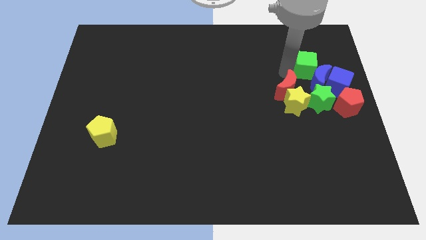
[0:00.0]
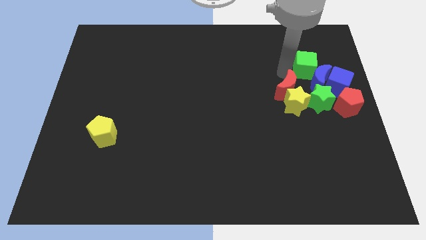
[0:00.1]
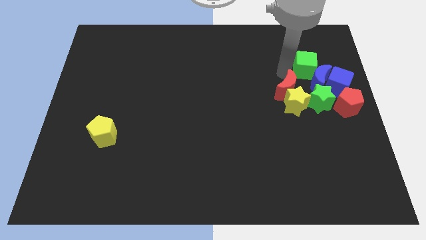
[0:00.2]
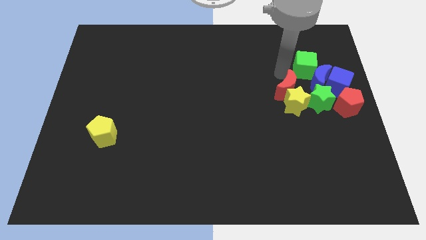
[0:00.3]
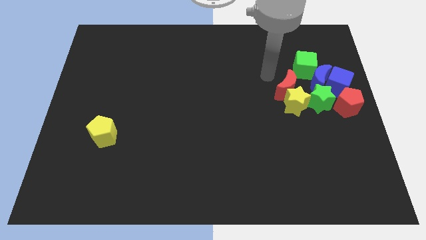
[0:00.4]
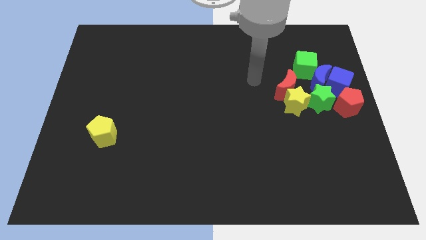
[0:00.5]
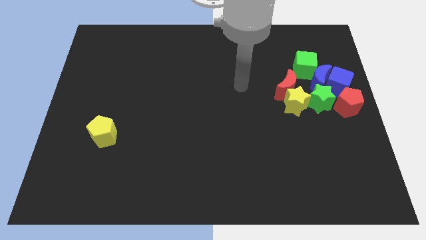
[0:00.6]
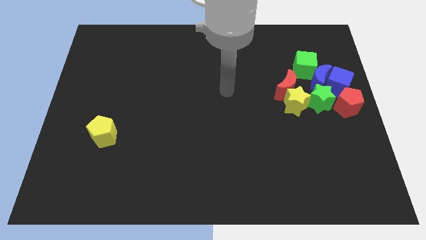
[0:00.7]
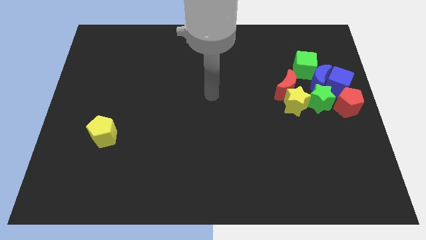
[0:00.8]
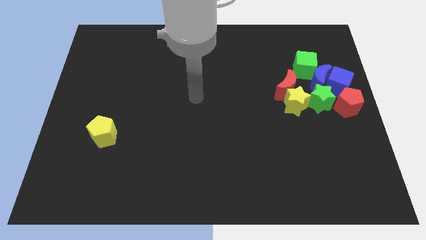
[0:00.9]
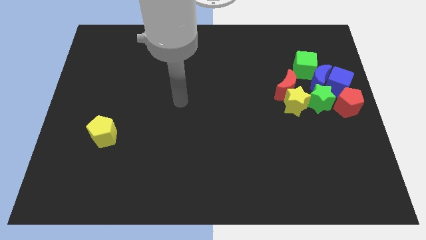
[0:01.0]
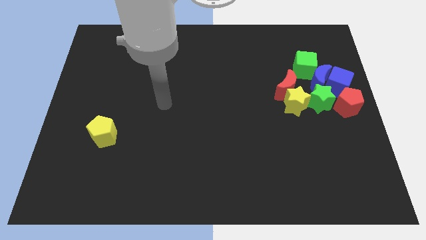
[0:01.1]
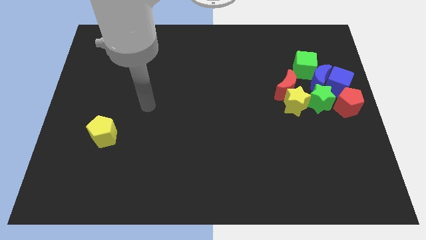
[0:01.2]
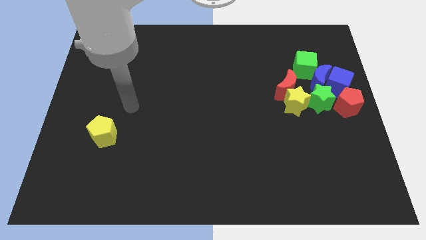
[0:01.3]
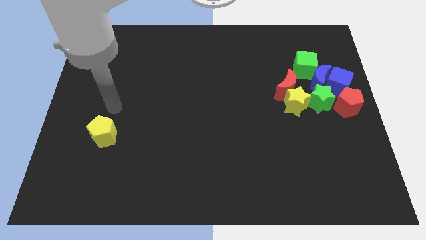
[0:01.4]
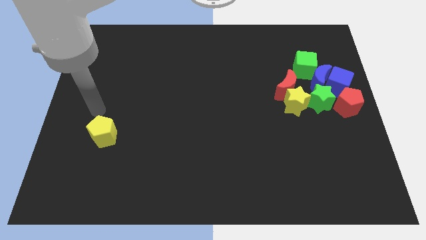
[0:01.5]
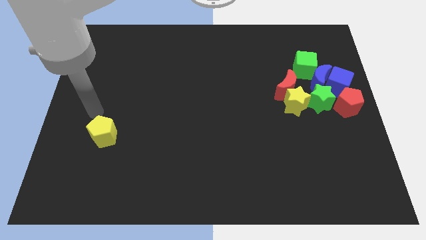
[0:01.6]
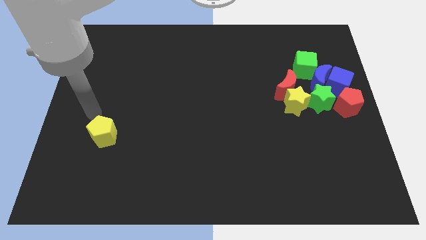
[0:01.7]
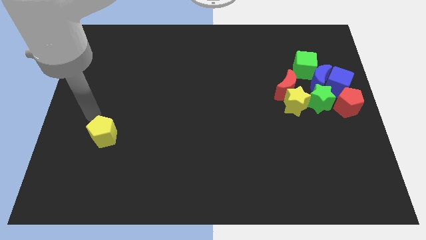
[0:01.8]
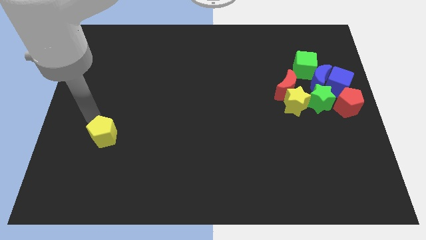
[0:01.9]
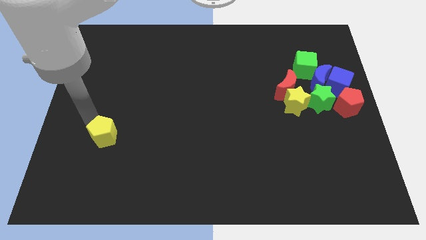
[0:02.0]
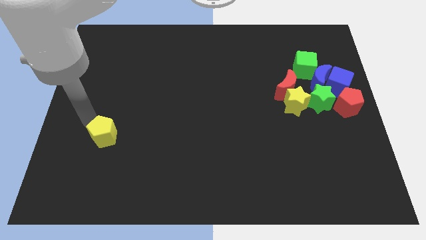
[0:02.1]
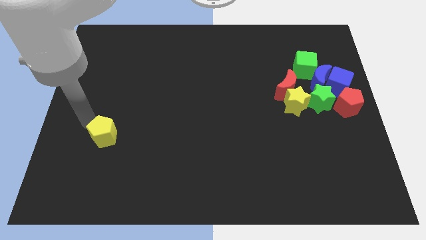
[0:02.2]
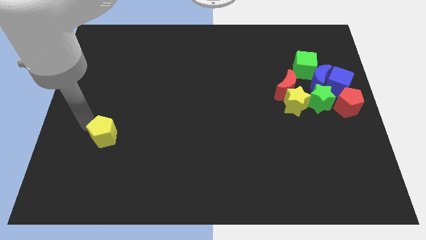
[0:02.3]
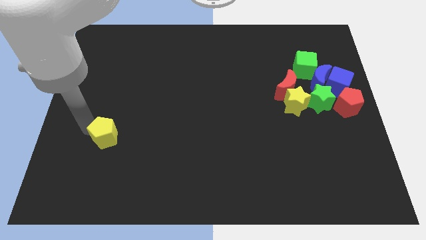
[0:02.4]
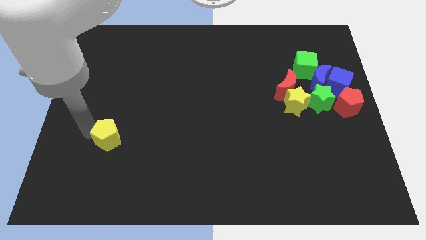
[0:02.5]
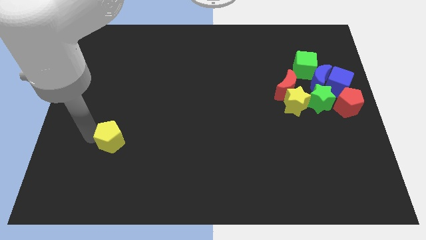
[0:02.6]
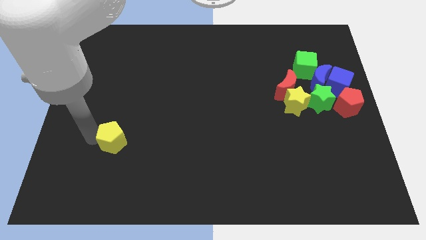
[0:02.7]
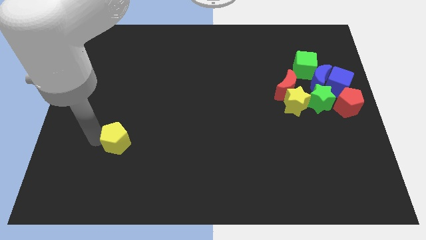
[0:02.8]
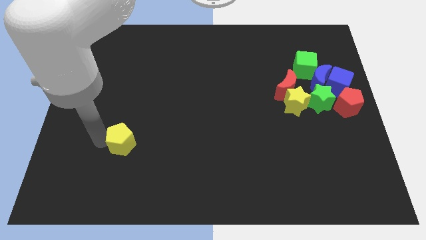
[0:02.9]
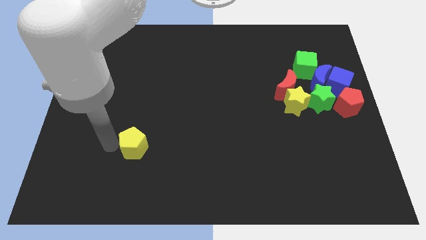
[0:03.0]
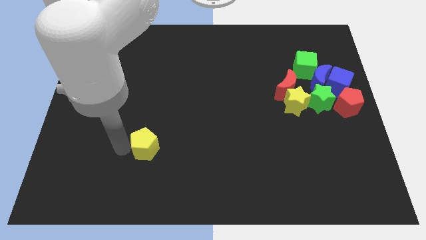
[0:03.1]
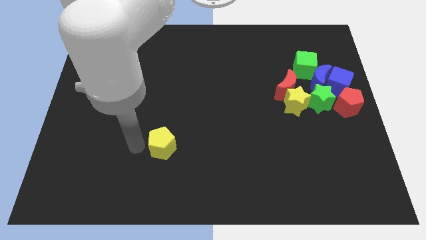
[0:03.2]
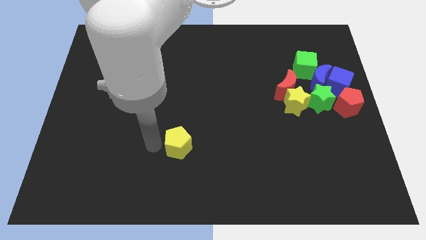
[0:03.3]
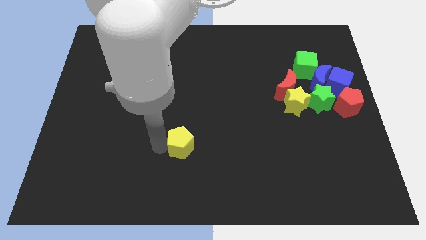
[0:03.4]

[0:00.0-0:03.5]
move your away from the green cube

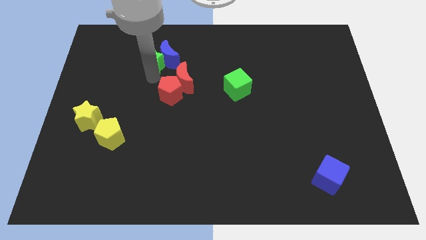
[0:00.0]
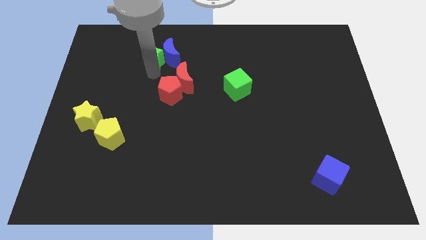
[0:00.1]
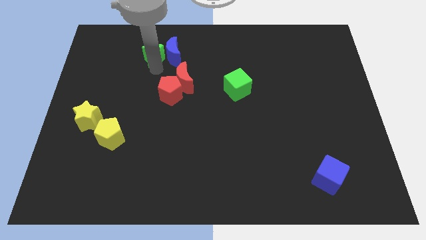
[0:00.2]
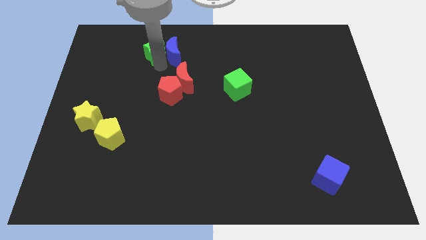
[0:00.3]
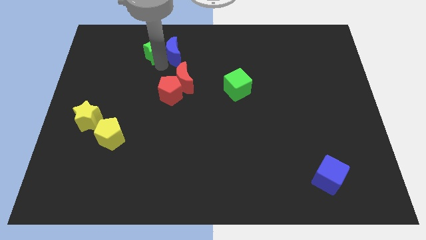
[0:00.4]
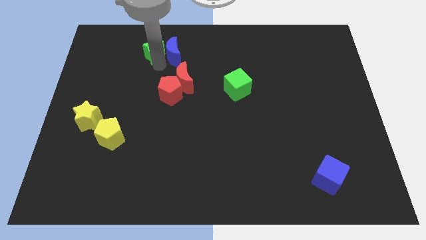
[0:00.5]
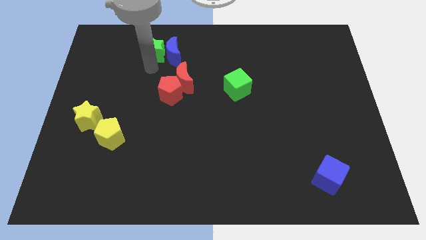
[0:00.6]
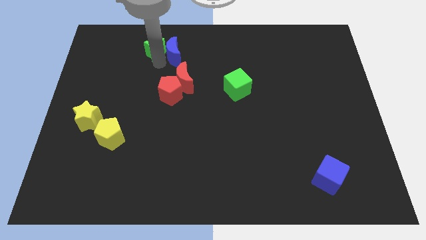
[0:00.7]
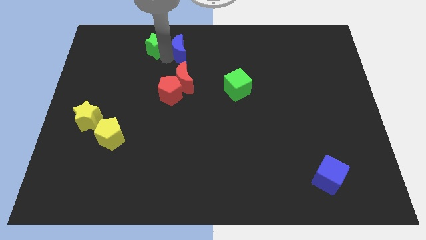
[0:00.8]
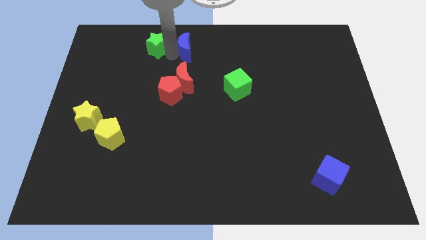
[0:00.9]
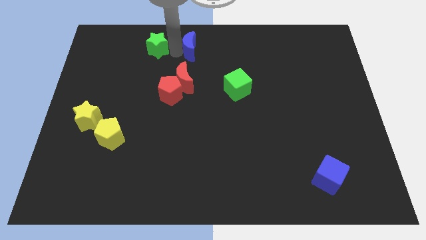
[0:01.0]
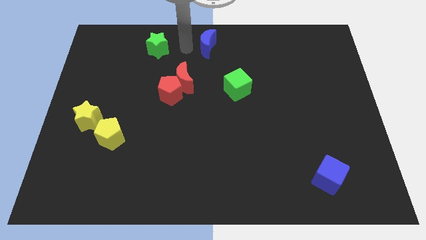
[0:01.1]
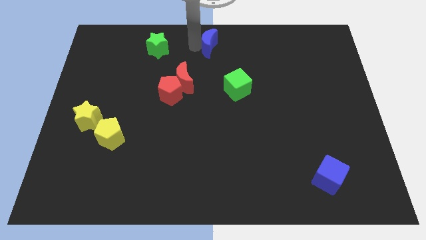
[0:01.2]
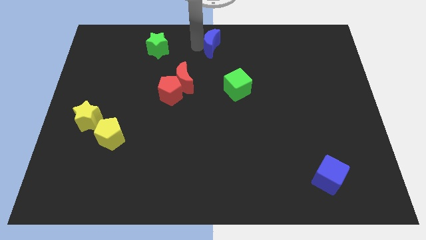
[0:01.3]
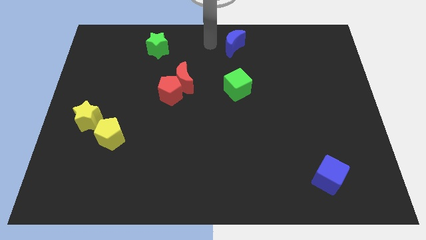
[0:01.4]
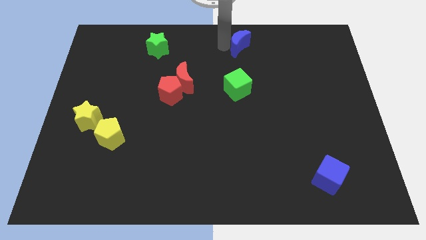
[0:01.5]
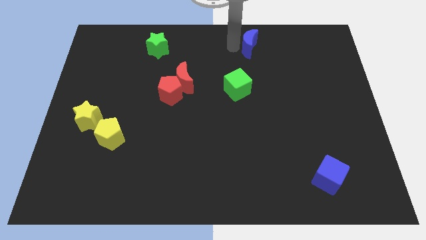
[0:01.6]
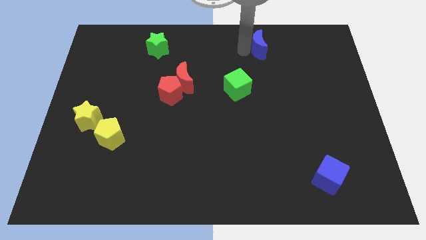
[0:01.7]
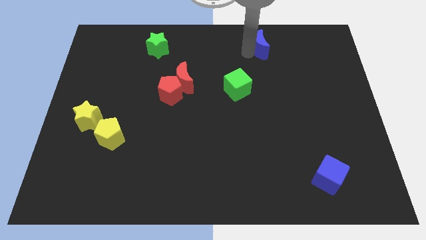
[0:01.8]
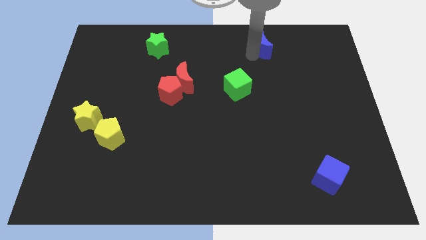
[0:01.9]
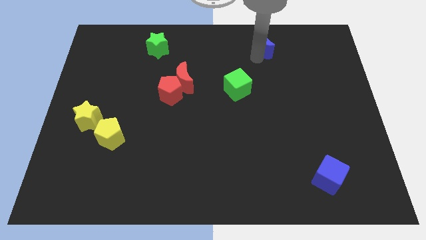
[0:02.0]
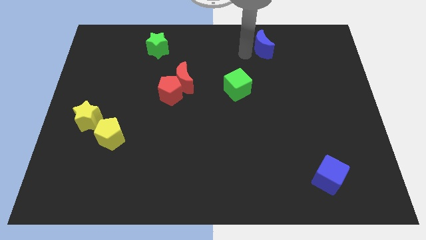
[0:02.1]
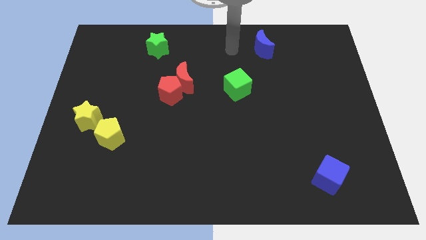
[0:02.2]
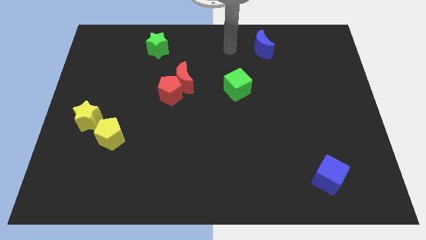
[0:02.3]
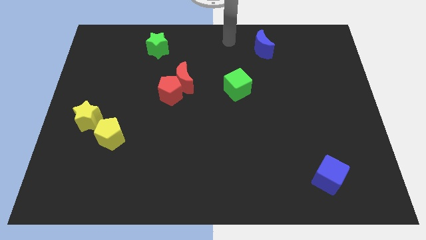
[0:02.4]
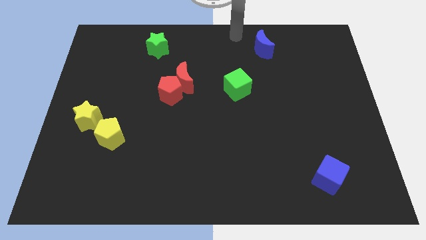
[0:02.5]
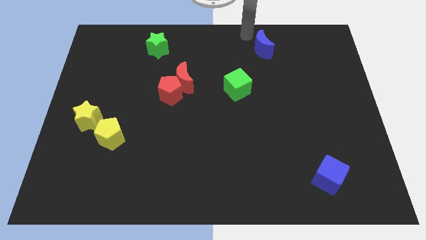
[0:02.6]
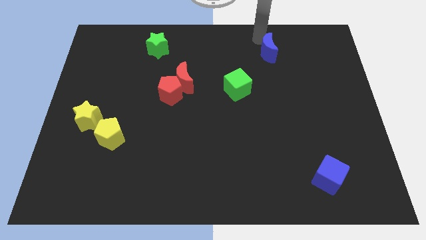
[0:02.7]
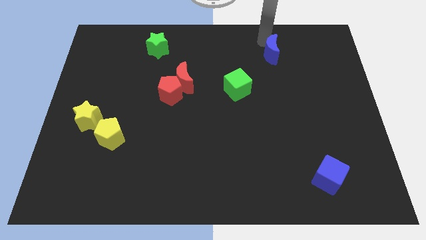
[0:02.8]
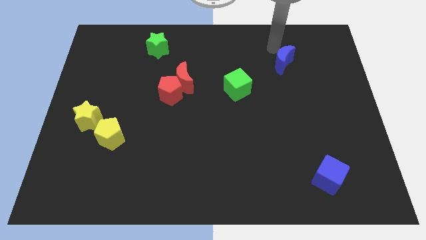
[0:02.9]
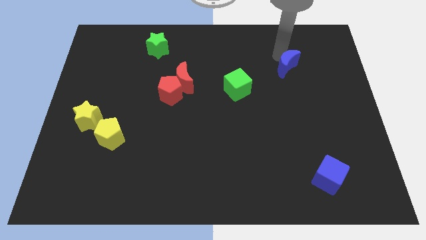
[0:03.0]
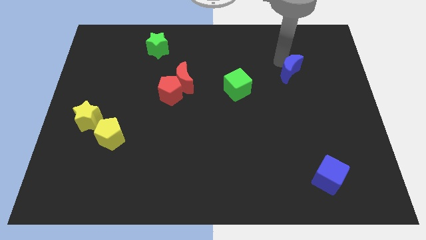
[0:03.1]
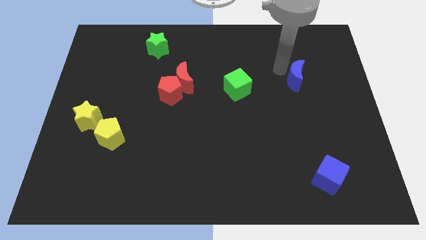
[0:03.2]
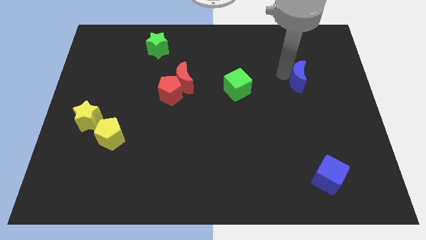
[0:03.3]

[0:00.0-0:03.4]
separate the blue crescent from the green star

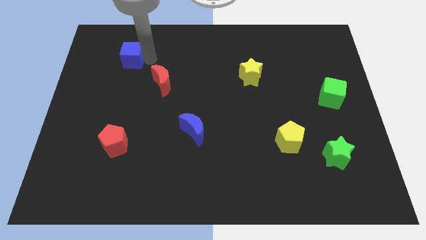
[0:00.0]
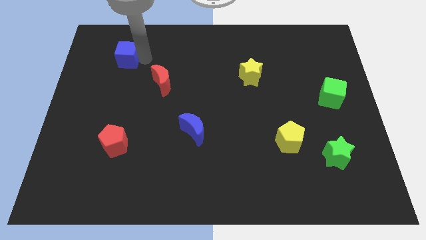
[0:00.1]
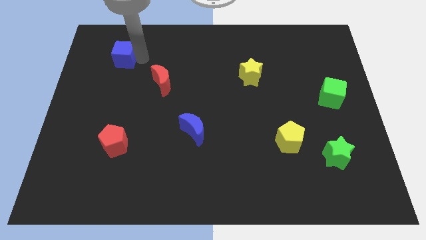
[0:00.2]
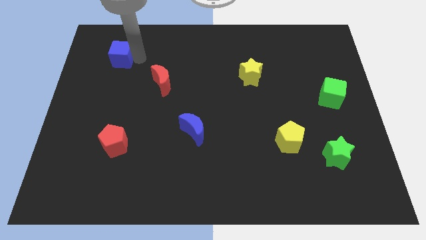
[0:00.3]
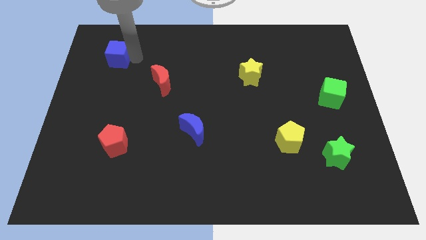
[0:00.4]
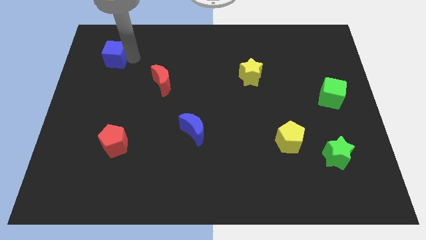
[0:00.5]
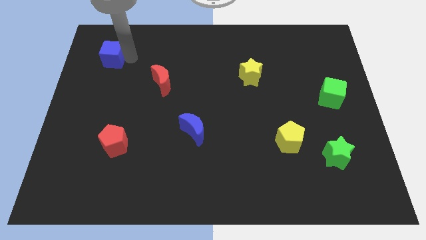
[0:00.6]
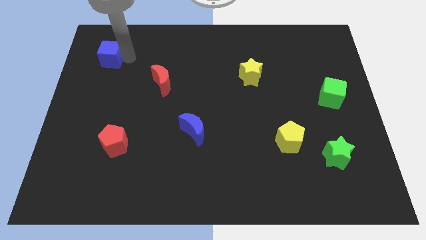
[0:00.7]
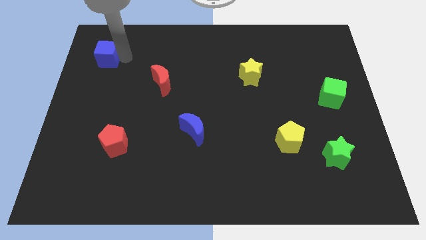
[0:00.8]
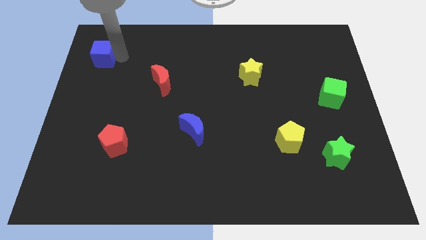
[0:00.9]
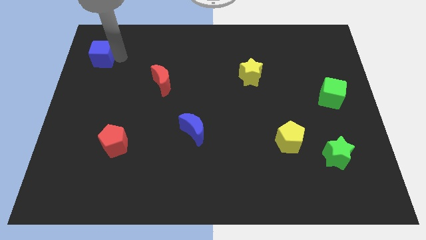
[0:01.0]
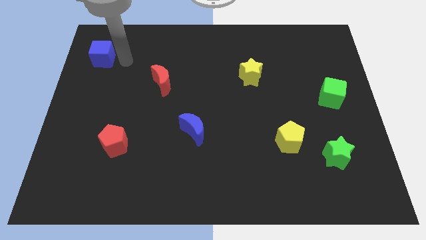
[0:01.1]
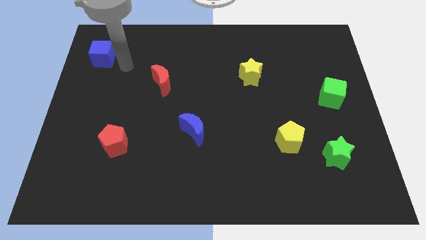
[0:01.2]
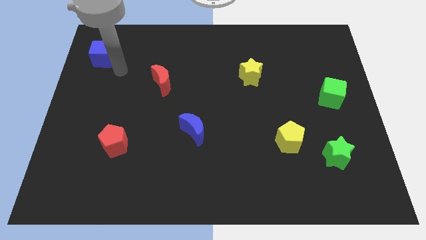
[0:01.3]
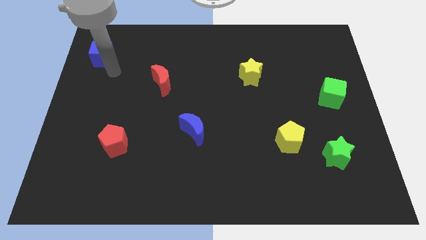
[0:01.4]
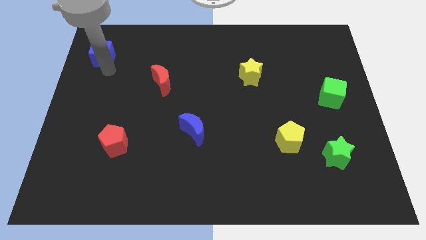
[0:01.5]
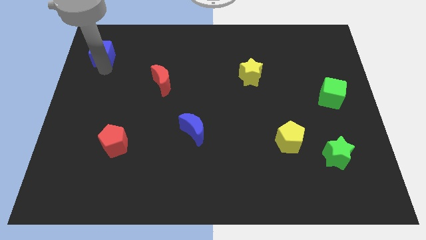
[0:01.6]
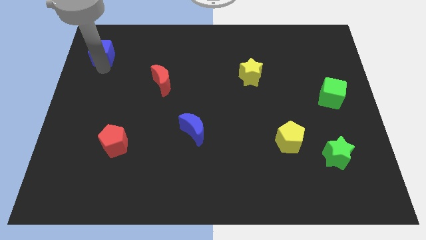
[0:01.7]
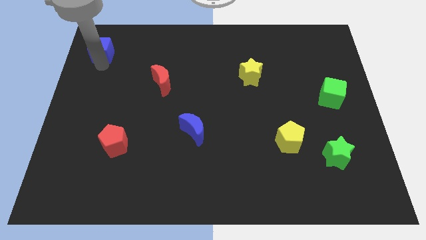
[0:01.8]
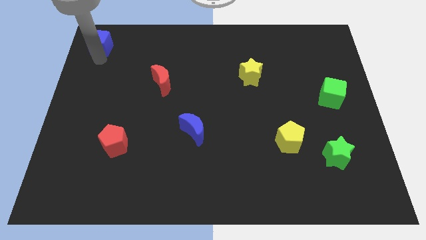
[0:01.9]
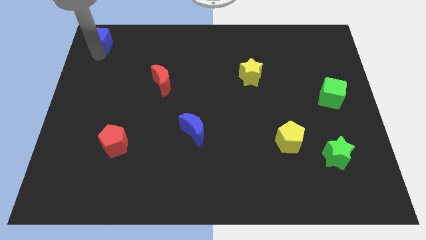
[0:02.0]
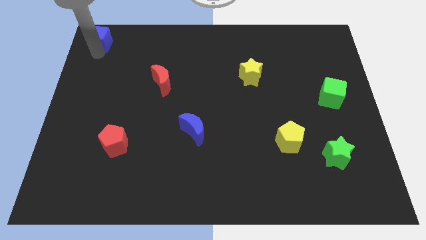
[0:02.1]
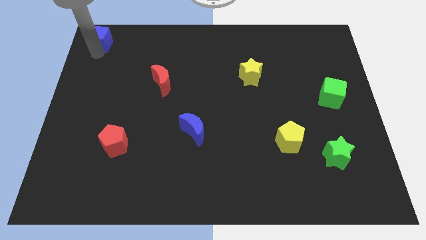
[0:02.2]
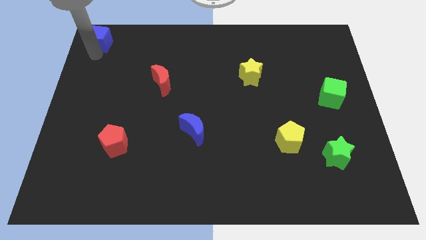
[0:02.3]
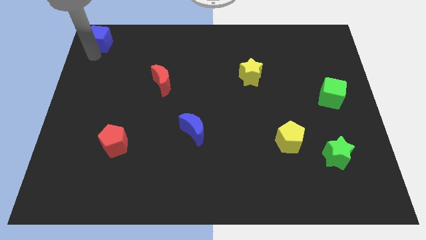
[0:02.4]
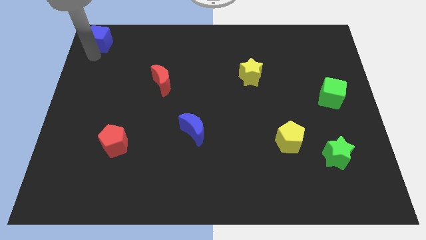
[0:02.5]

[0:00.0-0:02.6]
move the blue cube towards the top left of the board
